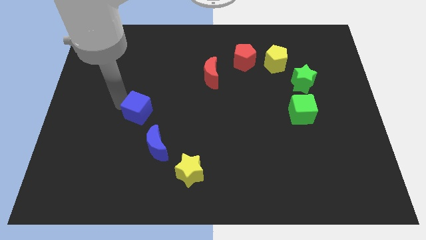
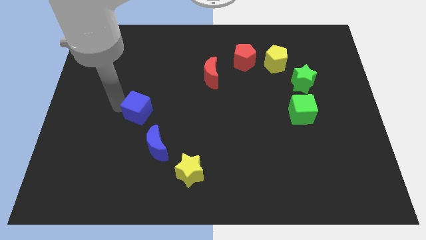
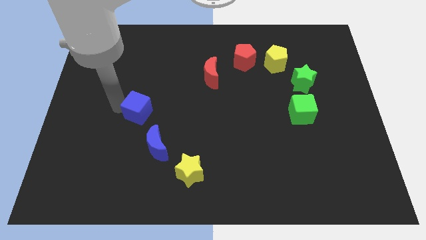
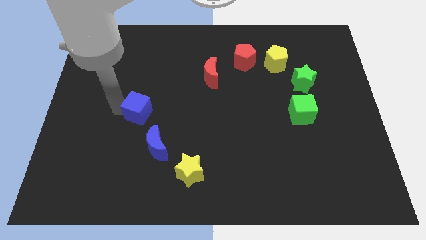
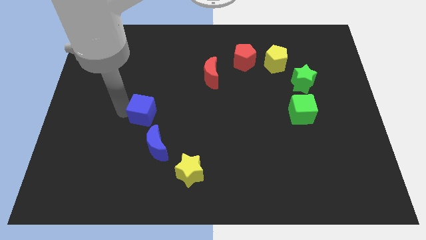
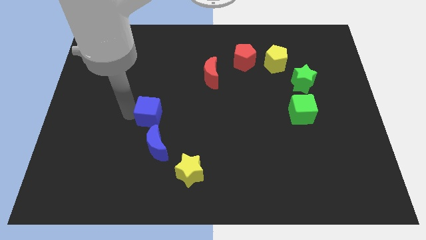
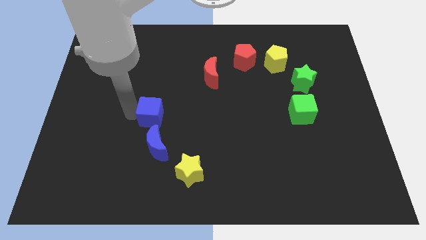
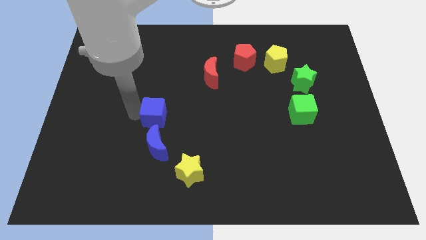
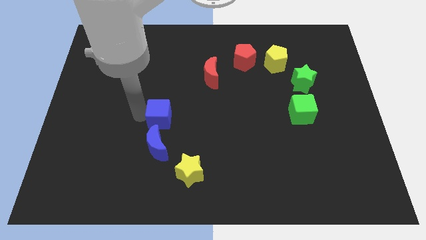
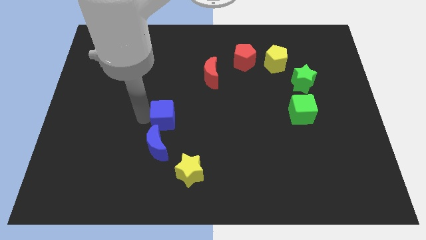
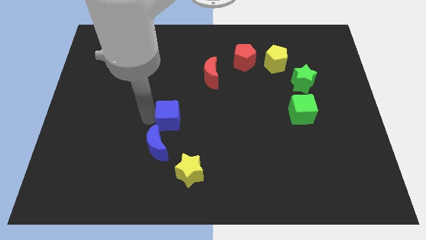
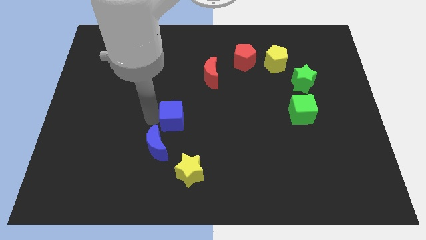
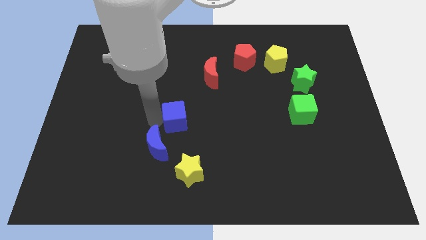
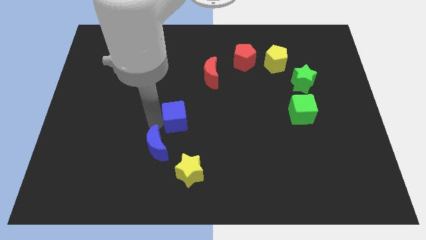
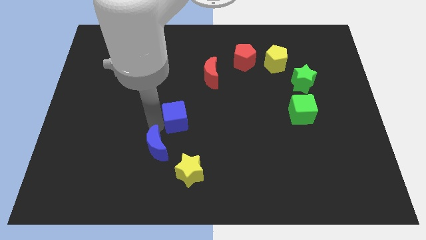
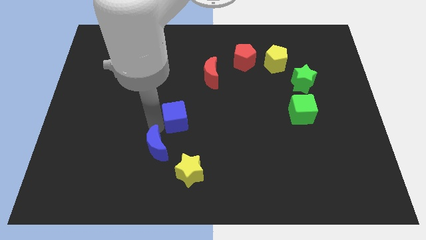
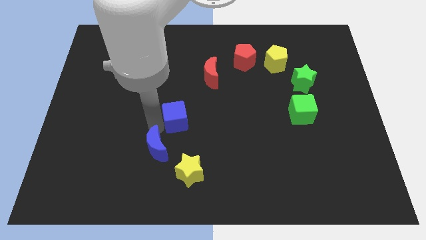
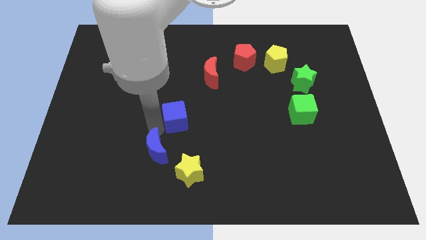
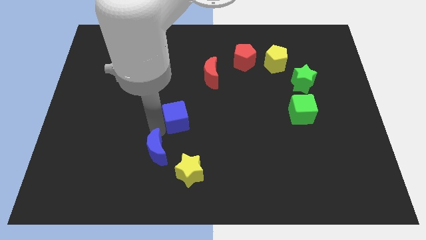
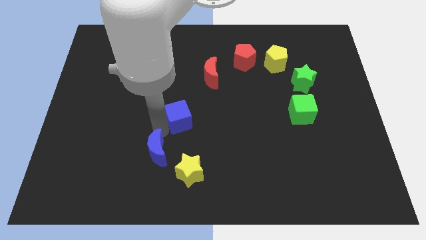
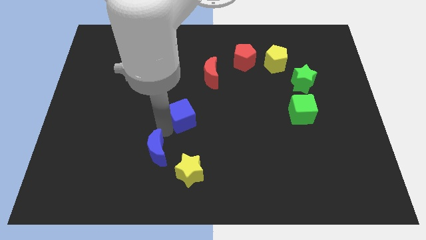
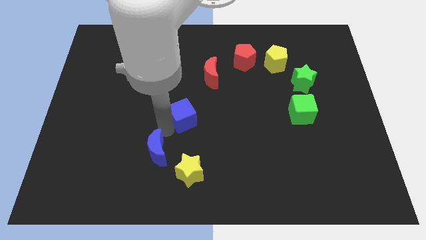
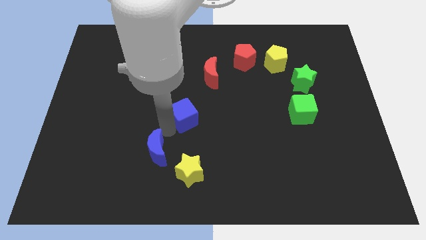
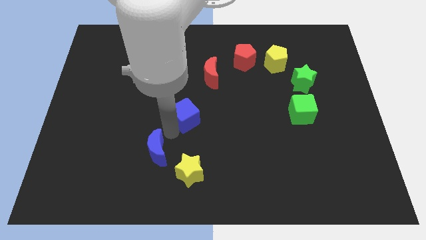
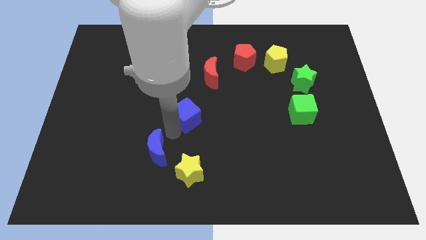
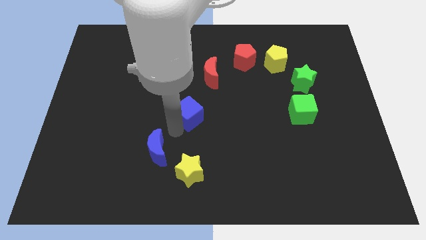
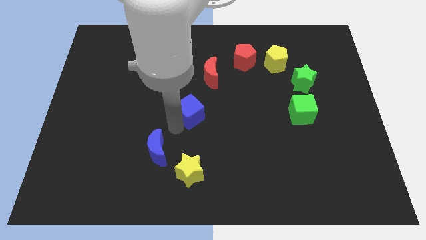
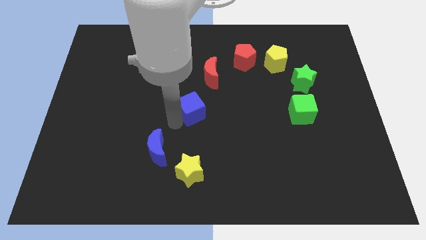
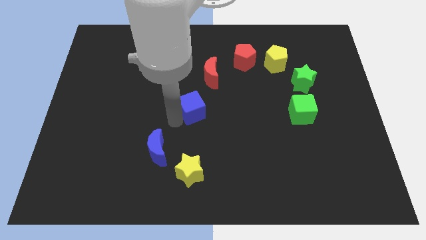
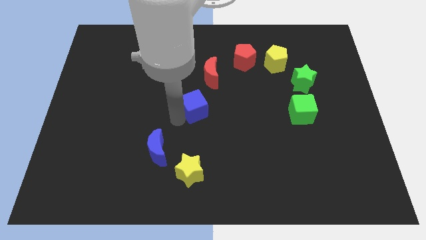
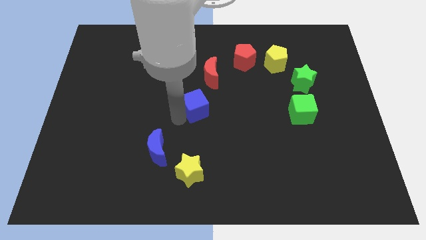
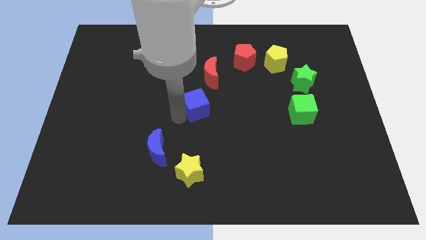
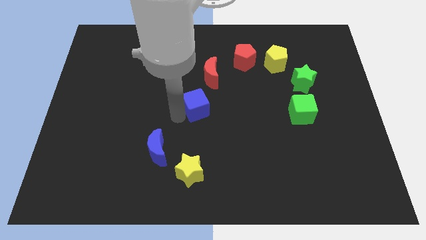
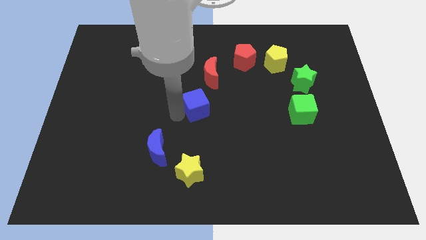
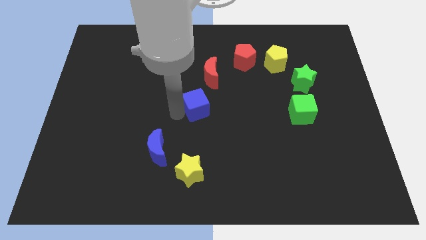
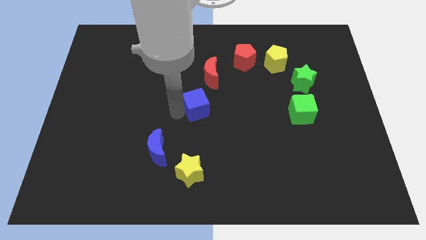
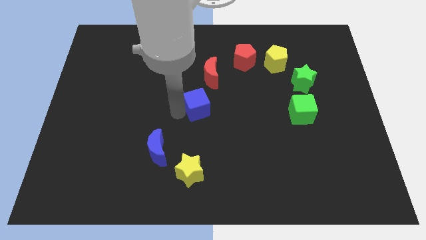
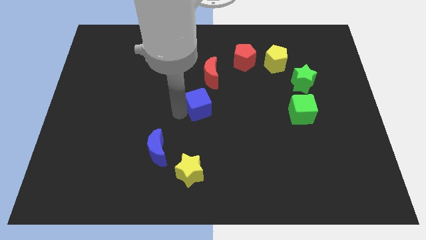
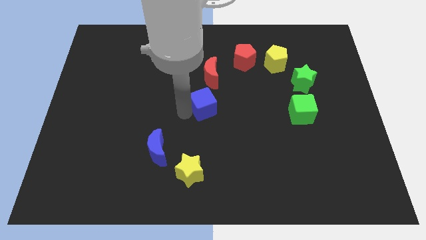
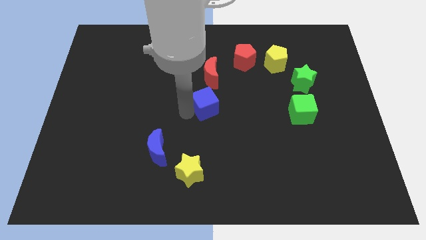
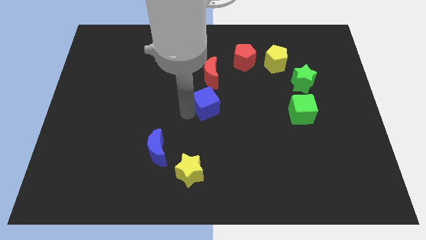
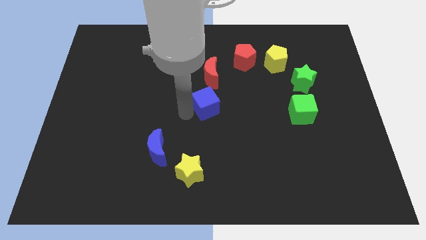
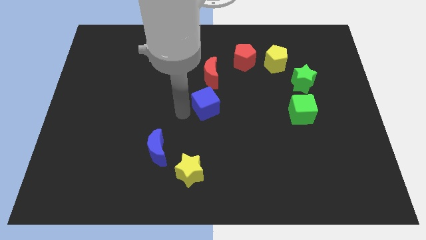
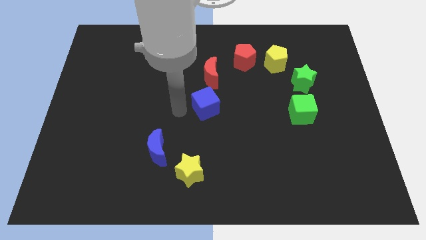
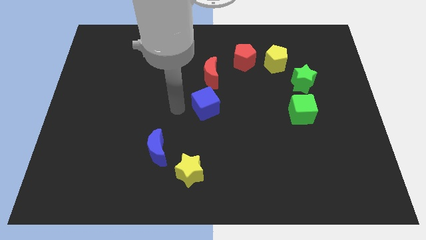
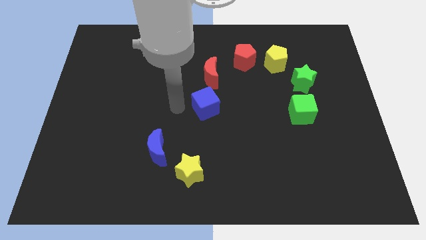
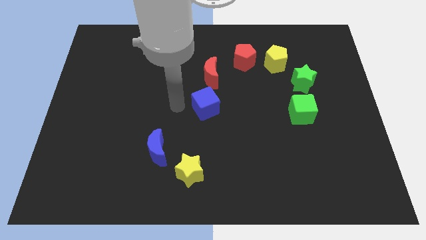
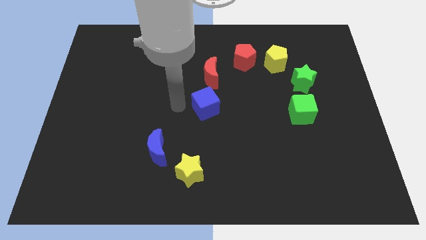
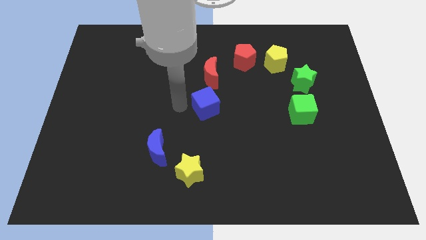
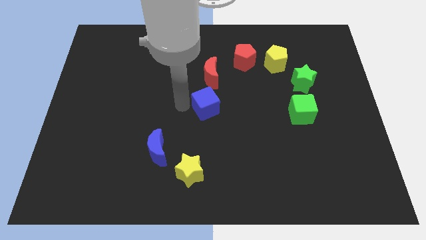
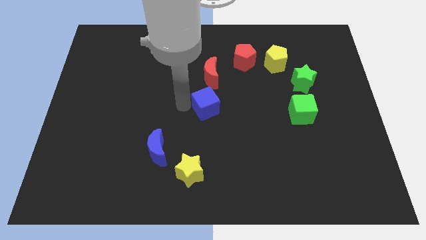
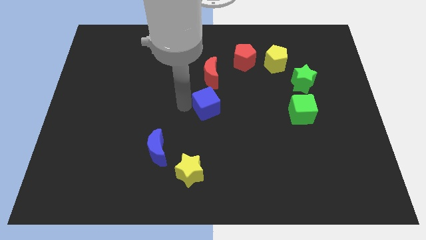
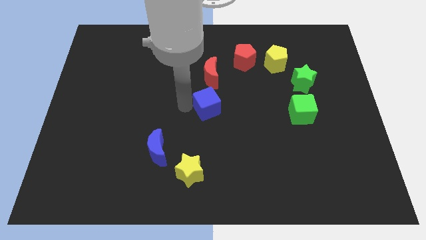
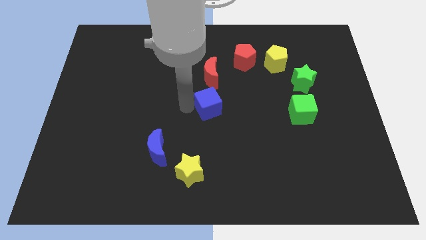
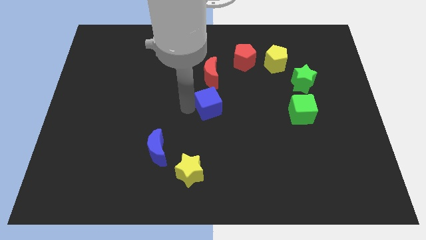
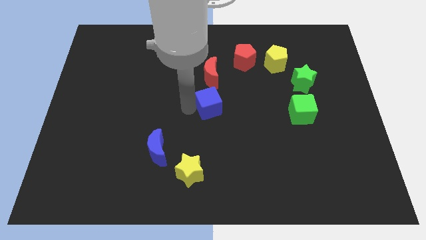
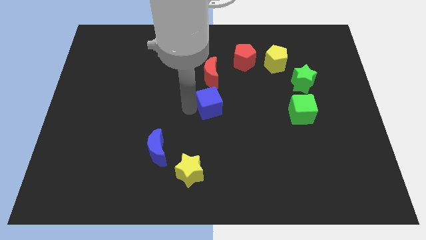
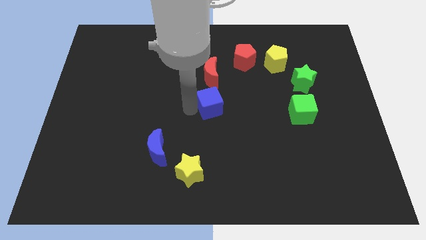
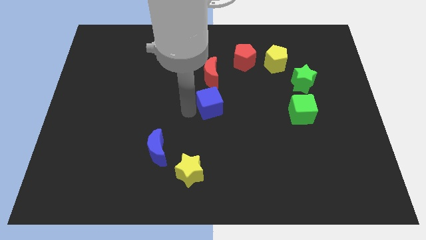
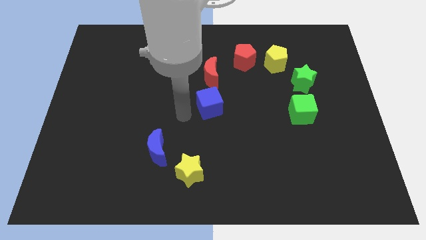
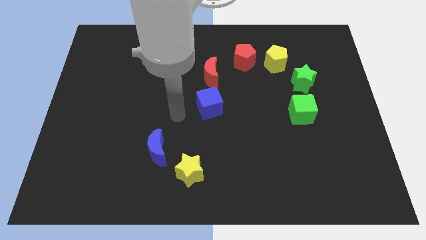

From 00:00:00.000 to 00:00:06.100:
push the blue cube to the bottom of the red crescent

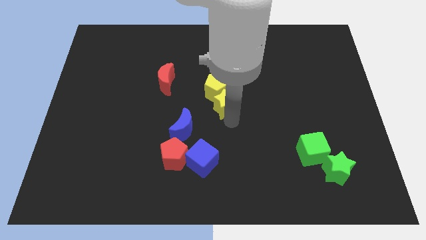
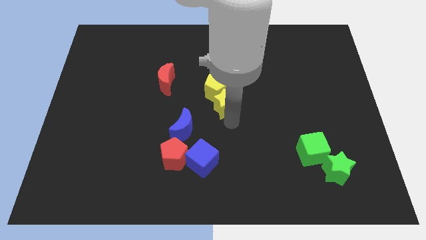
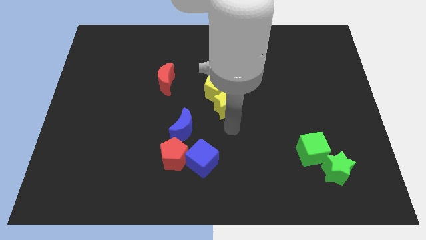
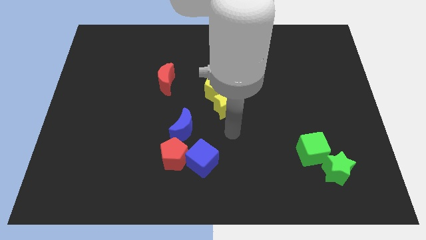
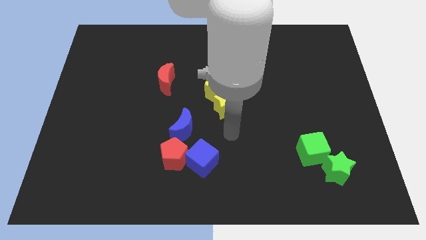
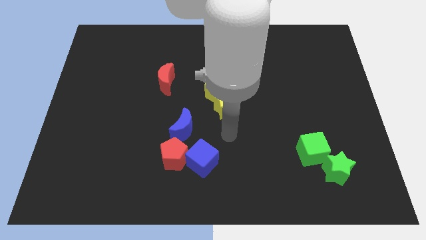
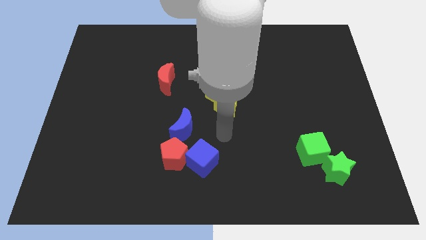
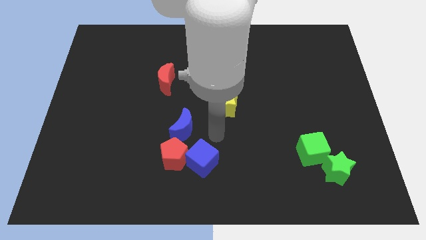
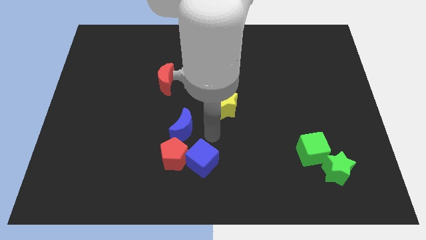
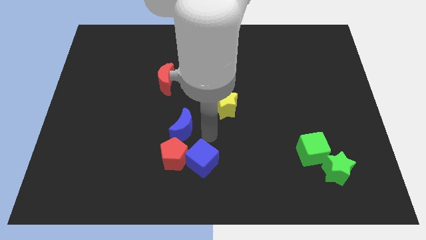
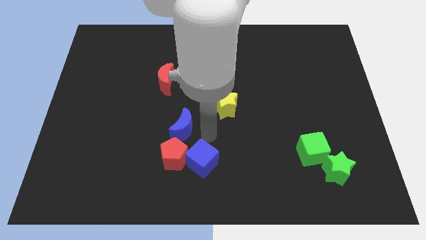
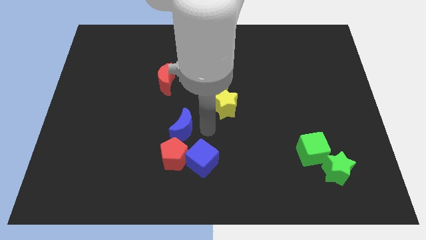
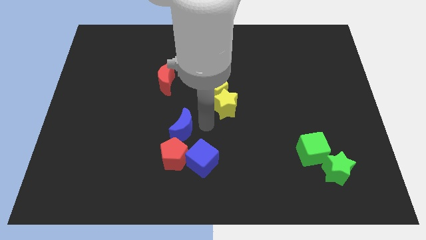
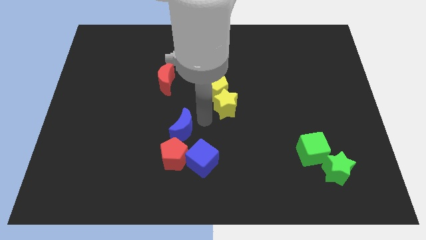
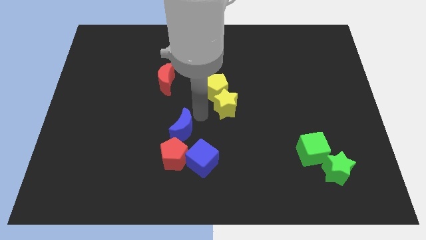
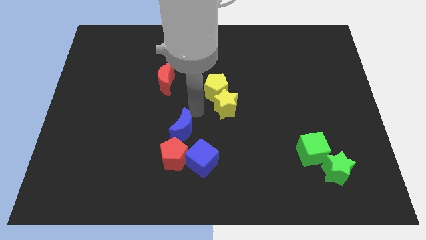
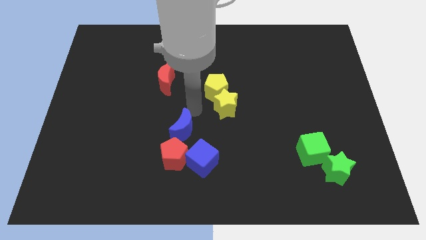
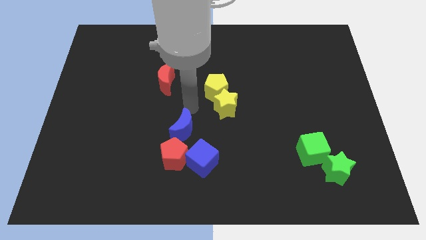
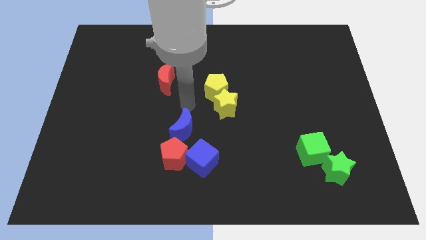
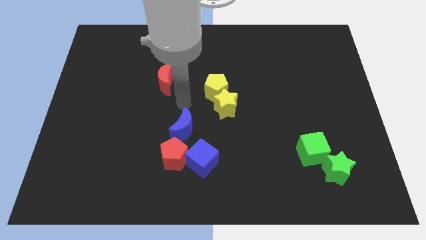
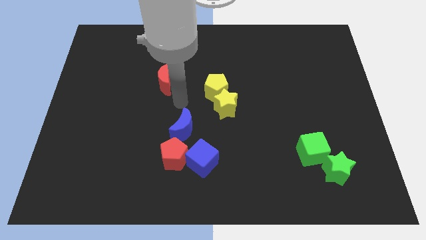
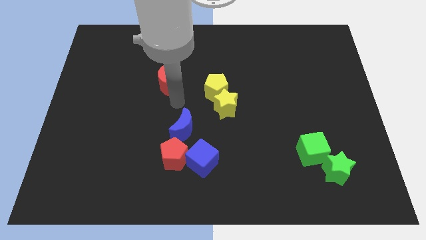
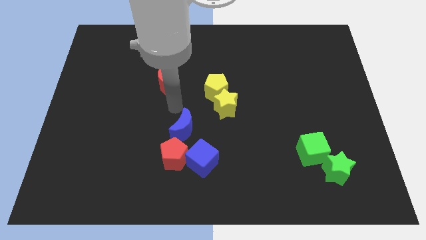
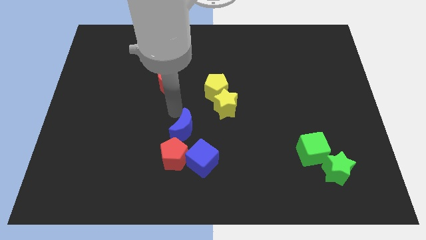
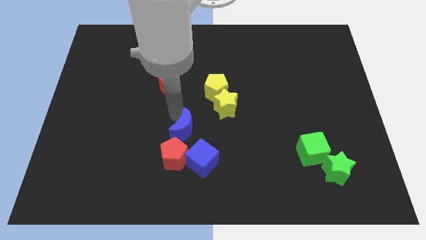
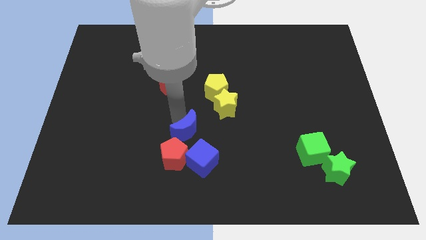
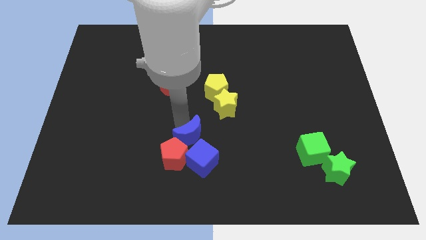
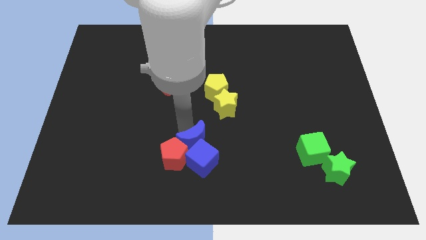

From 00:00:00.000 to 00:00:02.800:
move your arm in between the yellow star and blue moon
